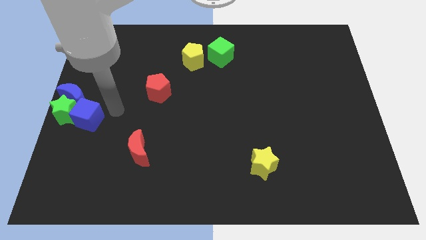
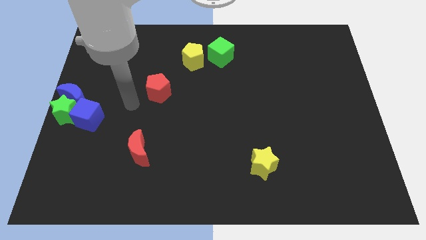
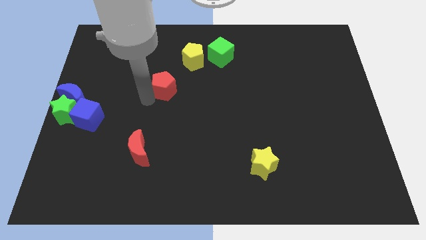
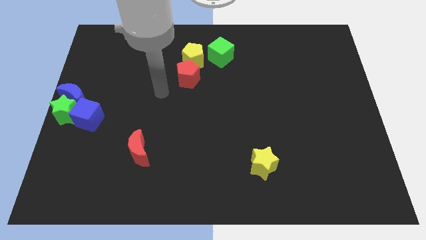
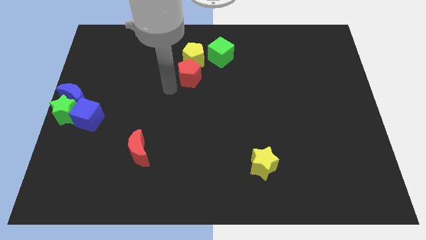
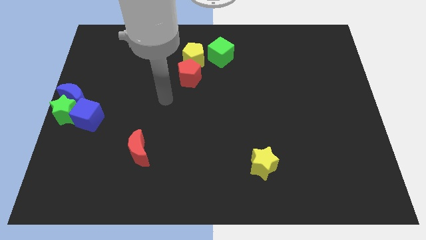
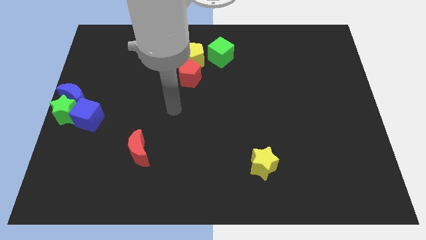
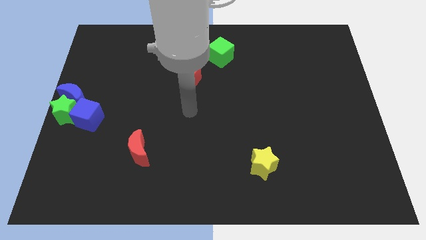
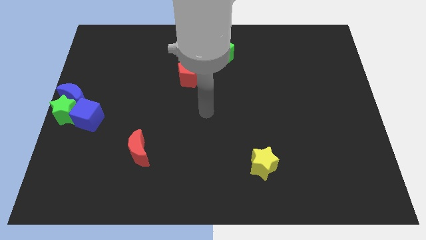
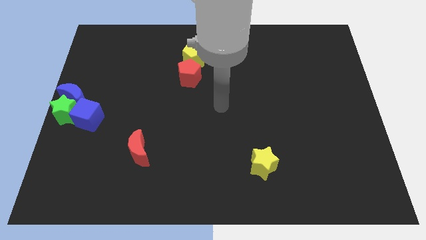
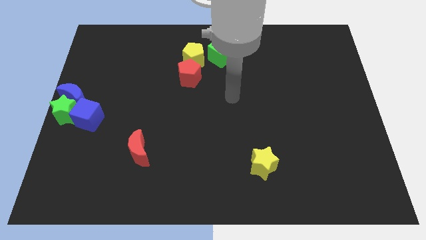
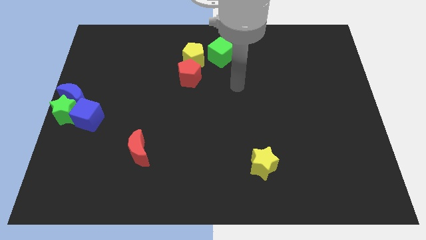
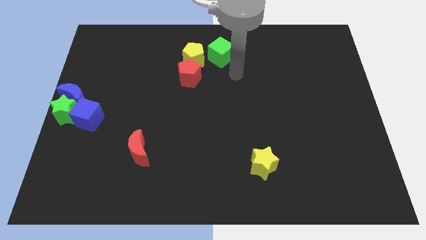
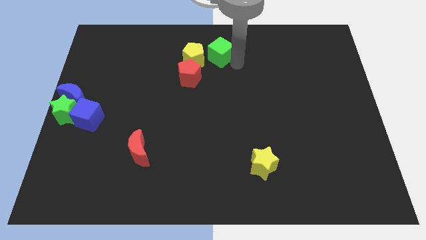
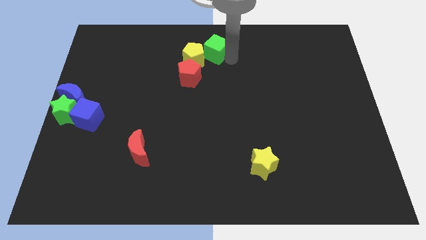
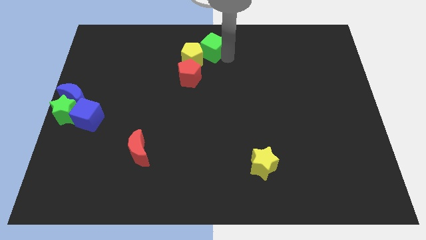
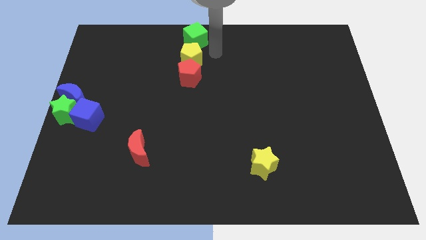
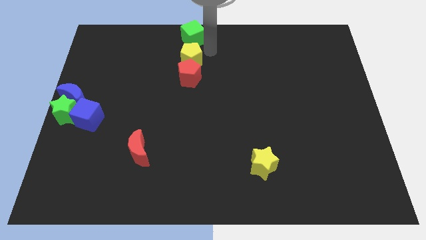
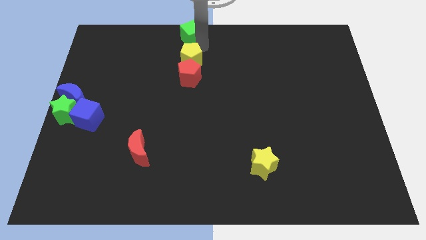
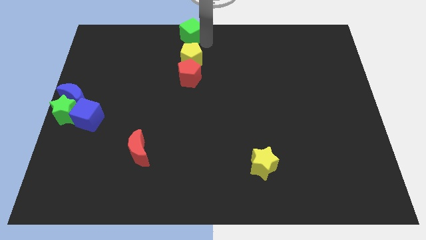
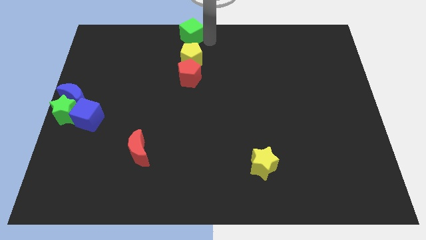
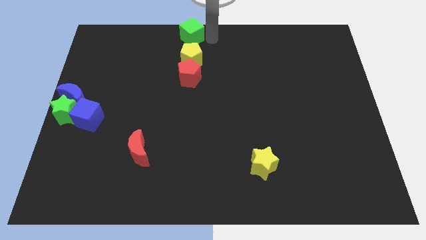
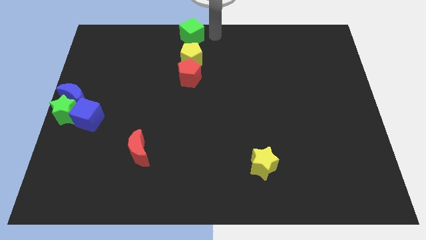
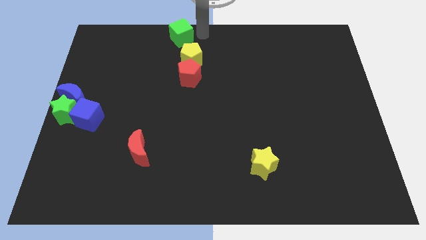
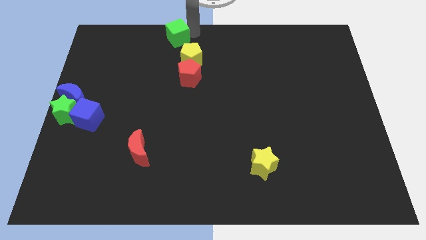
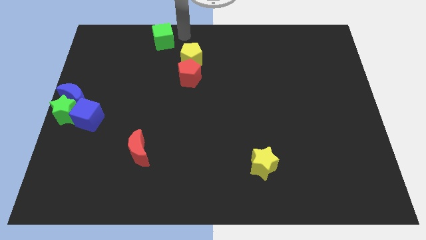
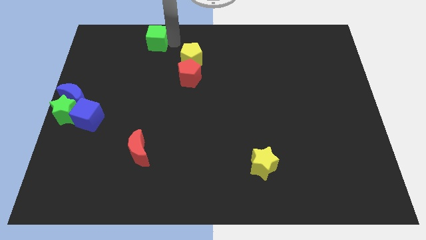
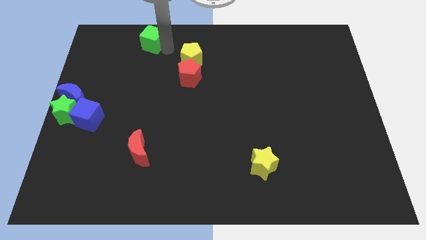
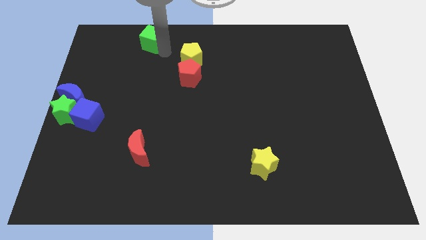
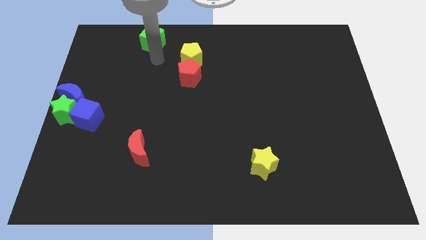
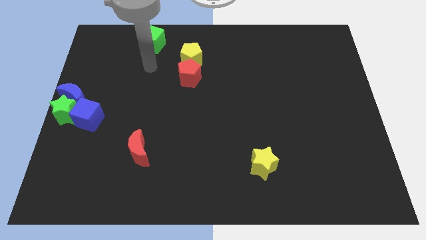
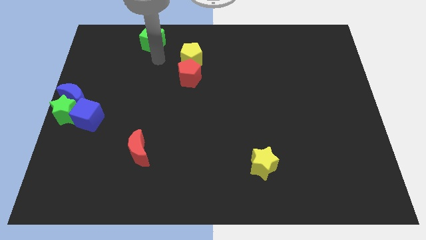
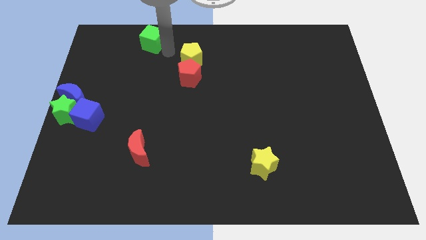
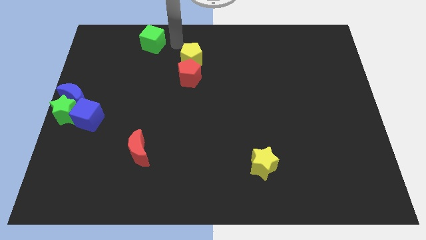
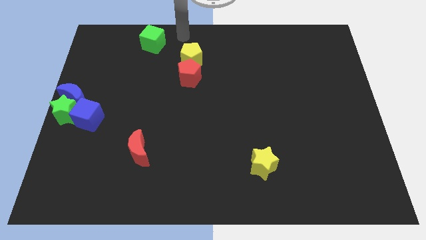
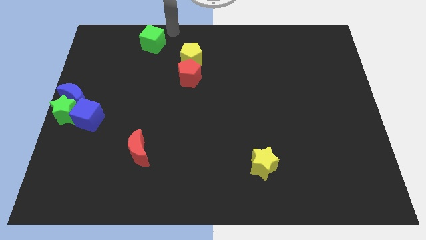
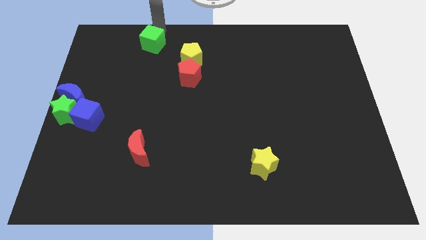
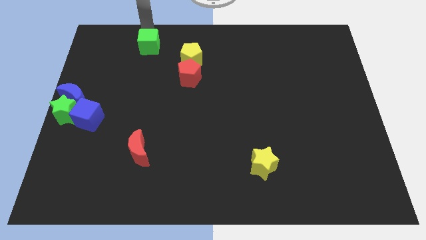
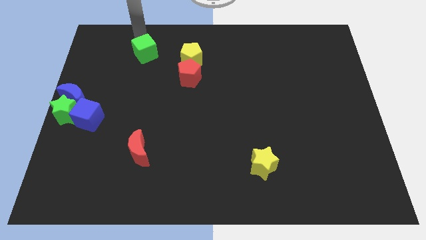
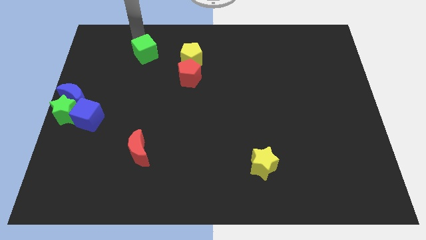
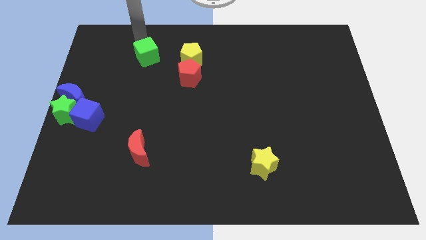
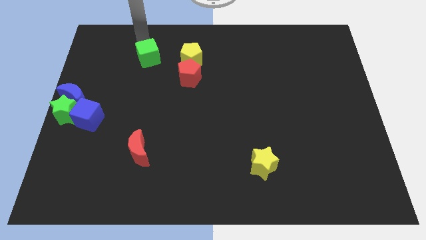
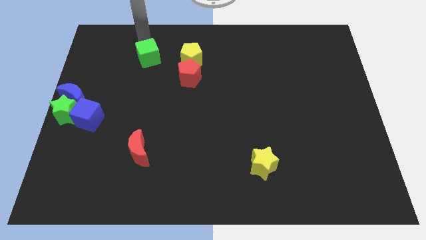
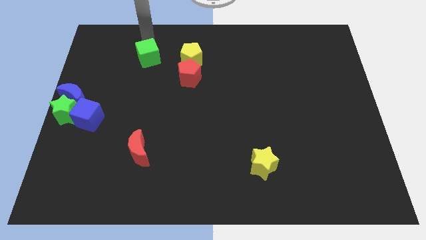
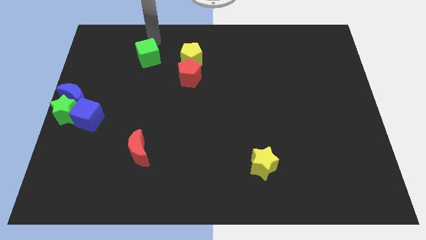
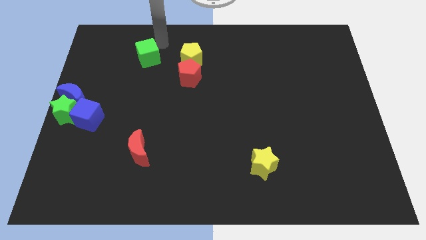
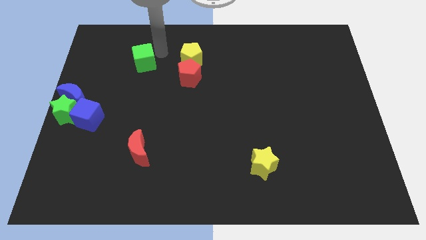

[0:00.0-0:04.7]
move green cube to the left of yellow pentagon

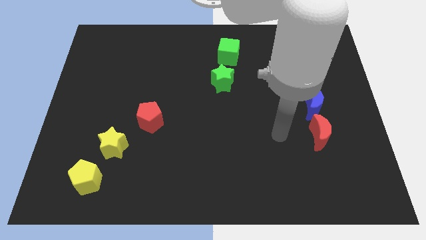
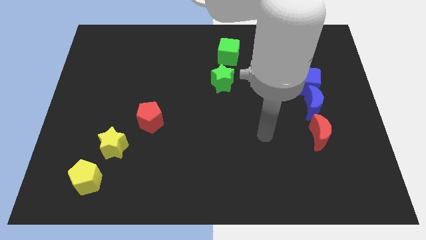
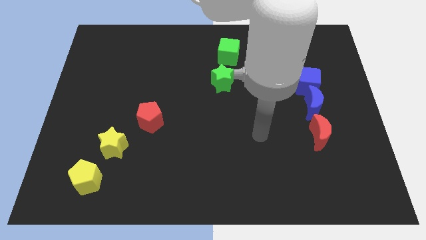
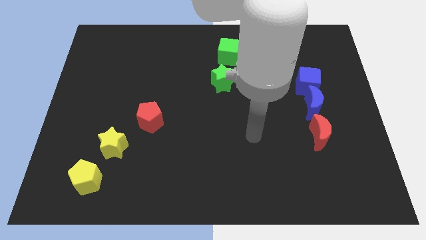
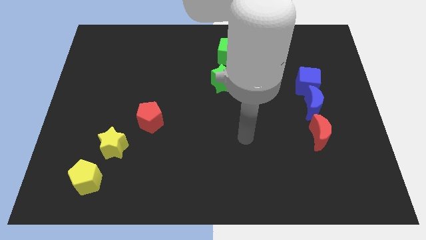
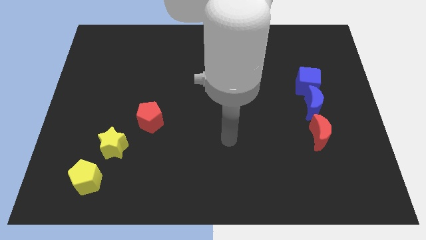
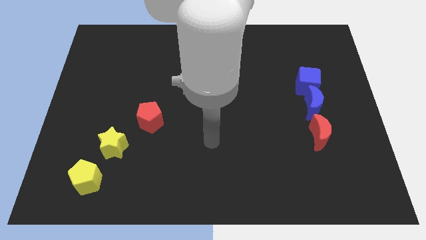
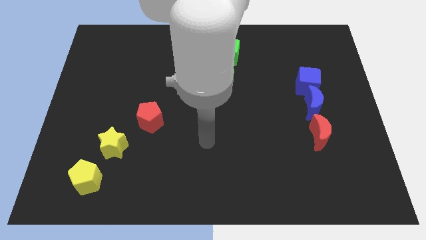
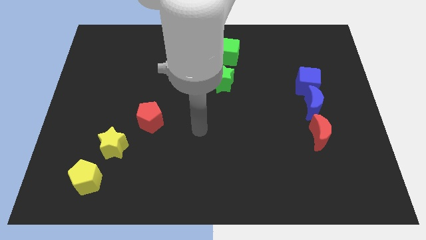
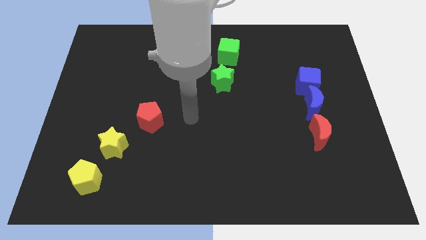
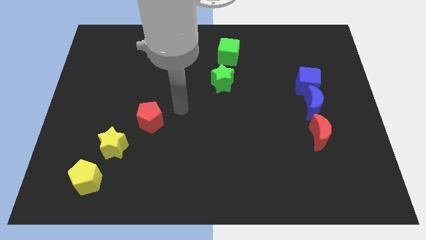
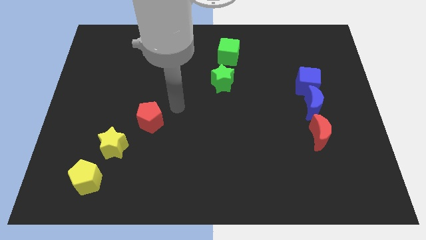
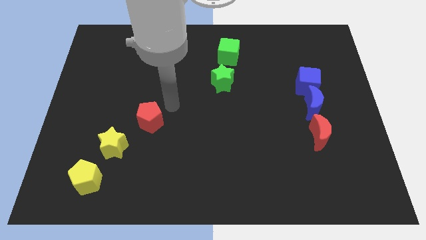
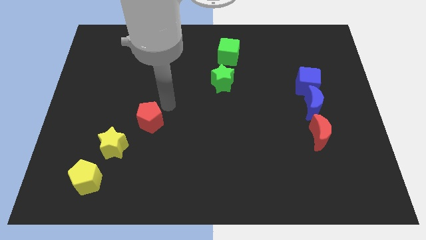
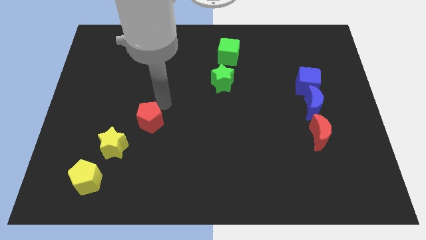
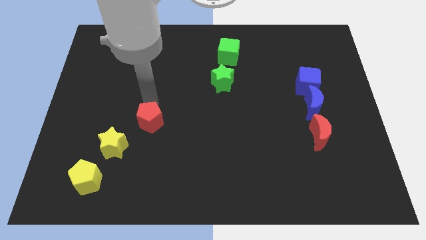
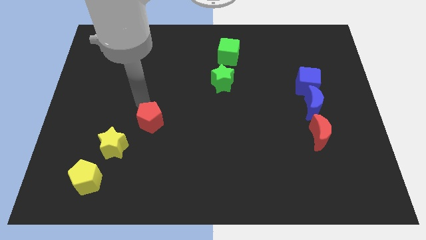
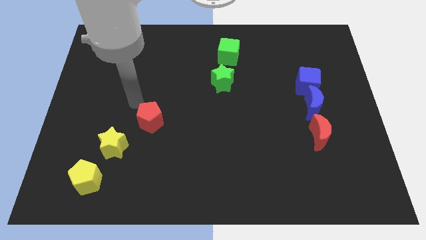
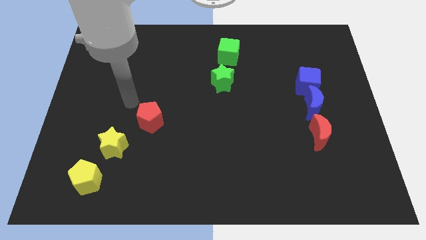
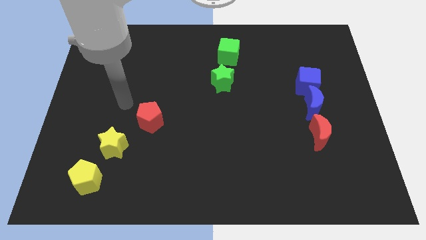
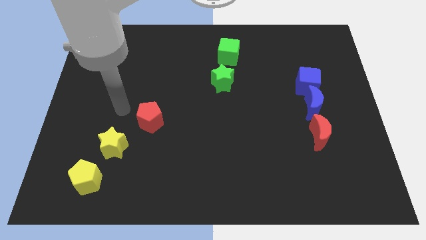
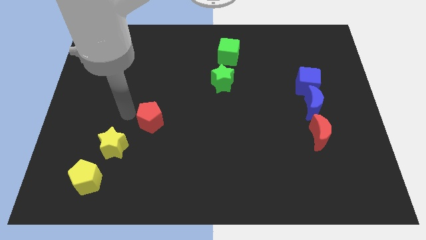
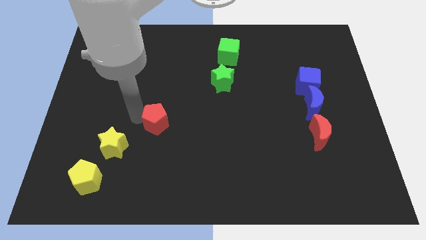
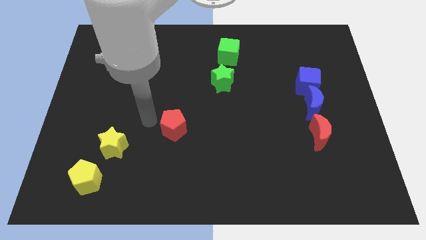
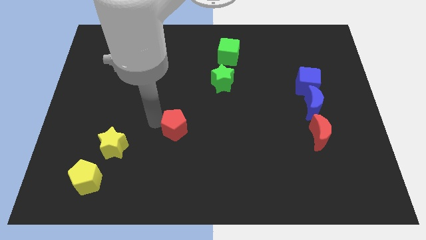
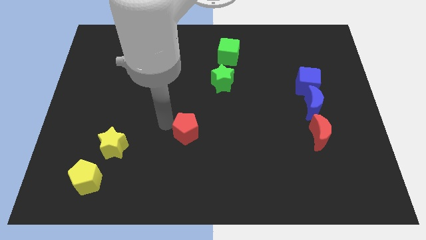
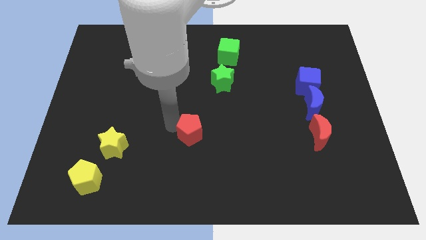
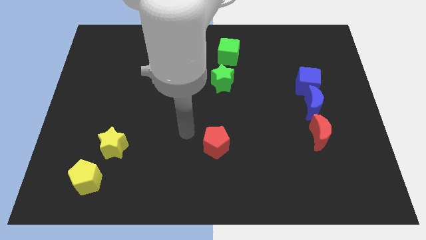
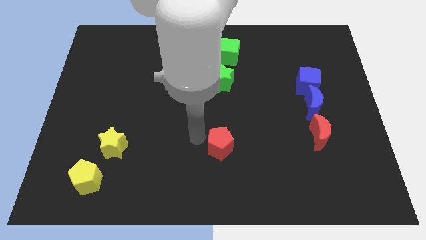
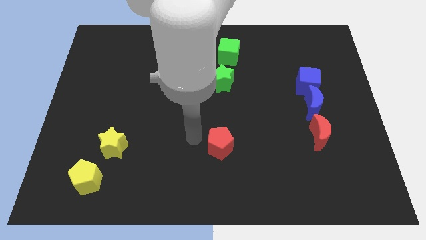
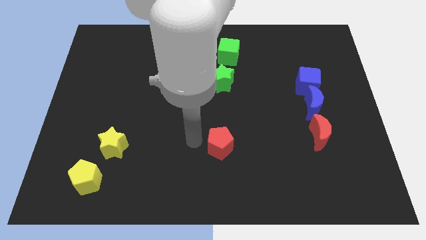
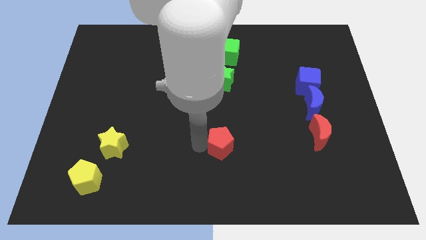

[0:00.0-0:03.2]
move red pentagon in between red moon and yellow star

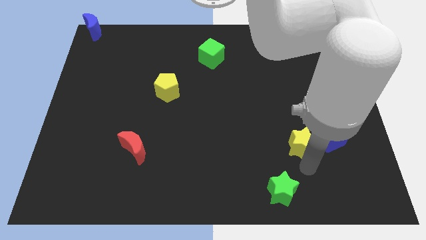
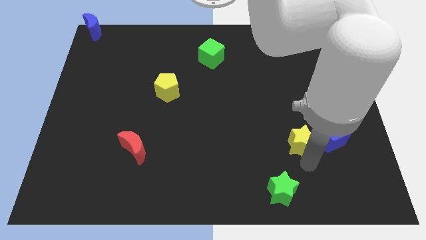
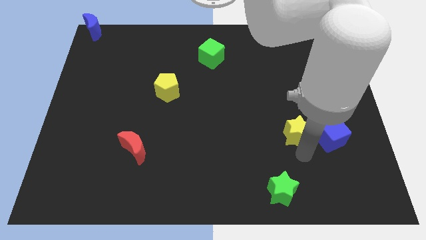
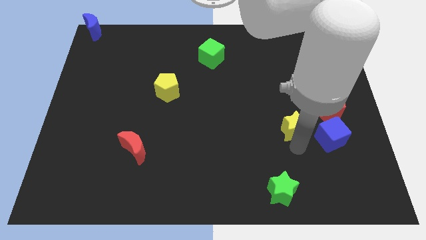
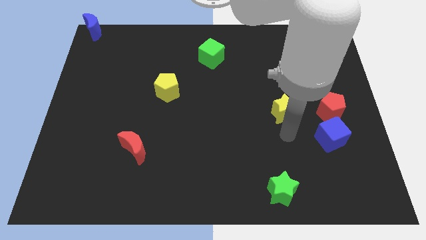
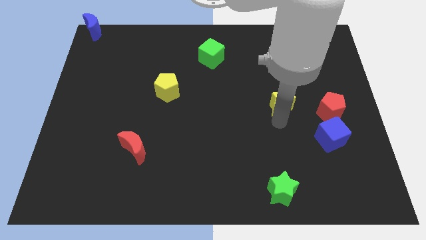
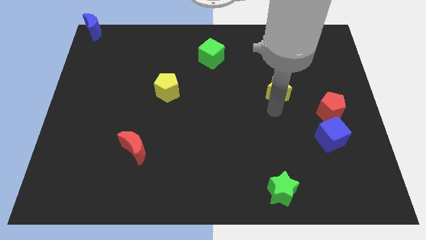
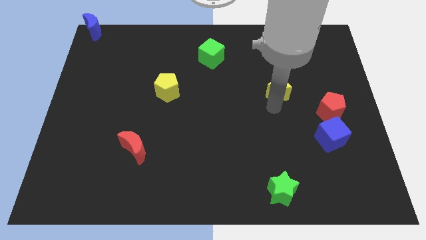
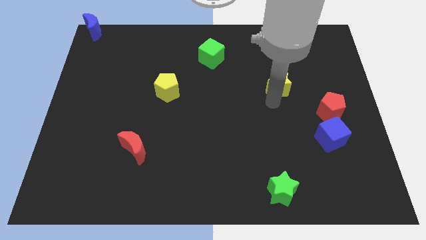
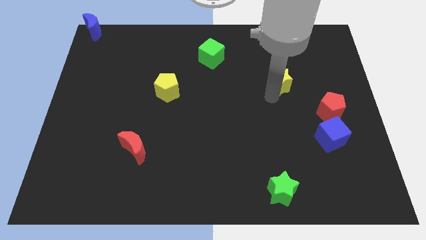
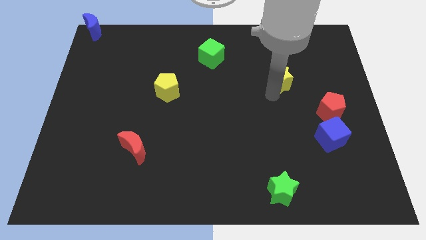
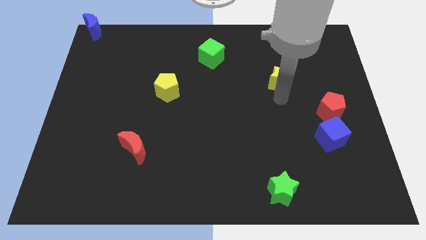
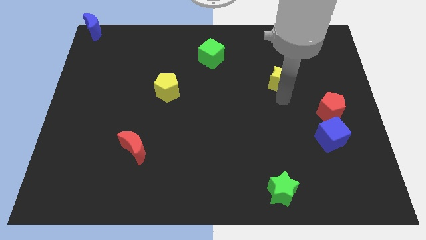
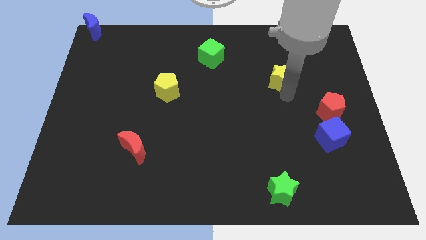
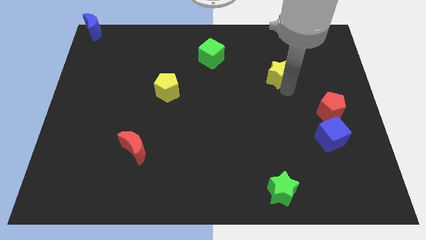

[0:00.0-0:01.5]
separate the yellow star from the left side of the blue cube
